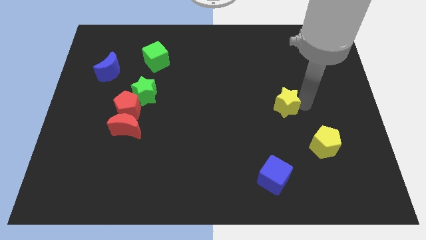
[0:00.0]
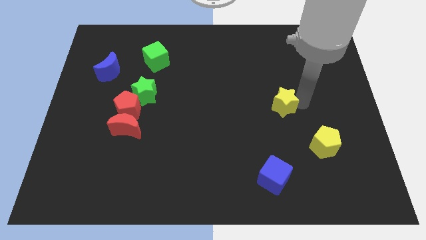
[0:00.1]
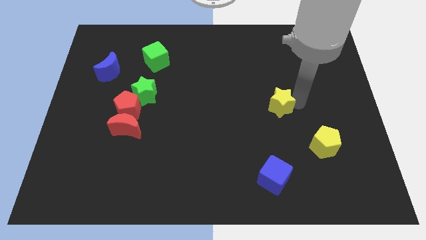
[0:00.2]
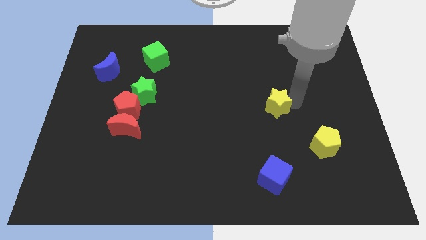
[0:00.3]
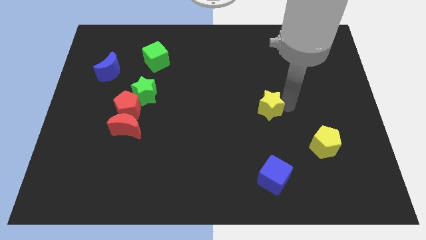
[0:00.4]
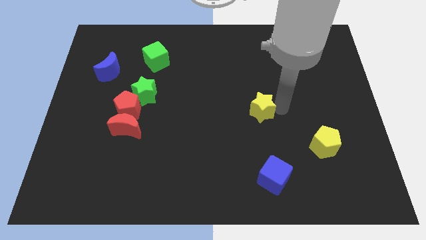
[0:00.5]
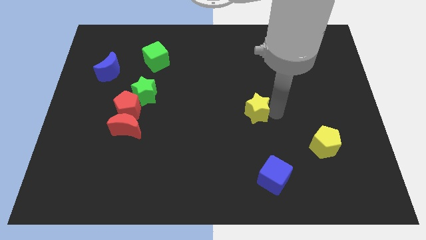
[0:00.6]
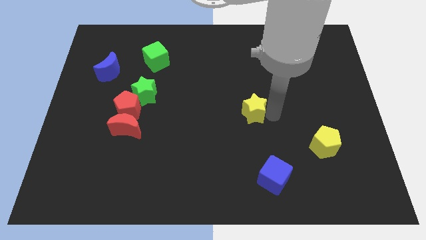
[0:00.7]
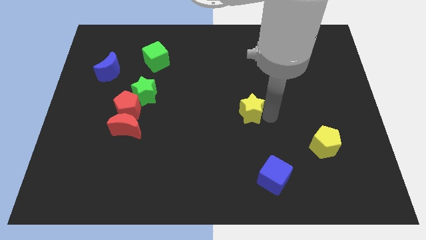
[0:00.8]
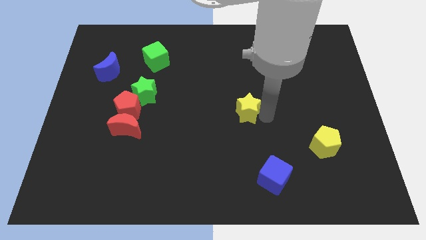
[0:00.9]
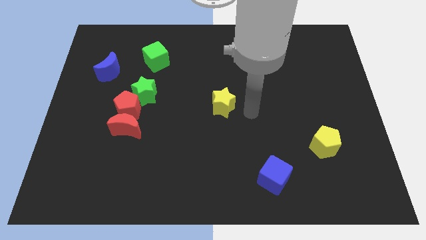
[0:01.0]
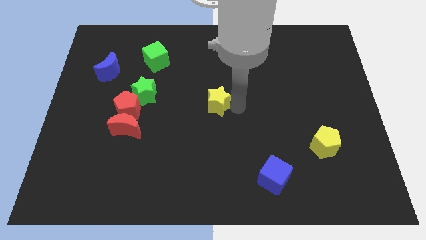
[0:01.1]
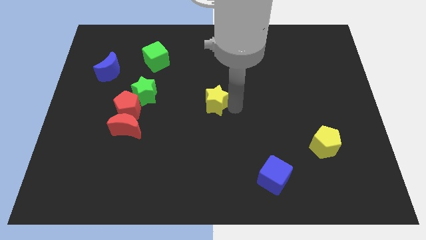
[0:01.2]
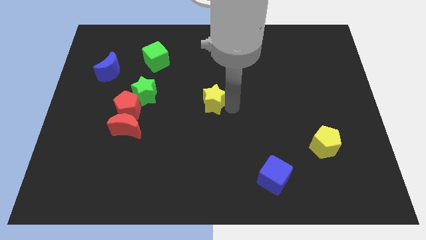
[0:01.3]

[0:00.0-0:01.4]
slide the yellow star to the center of the board

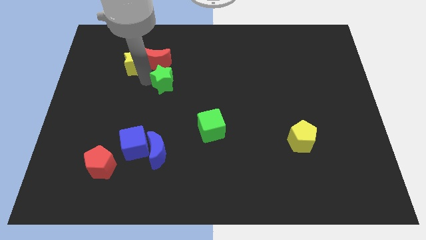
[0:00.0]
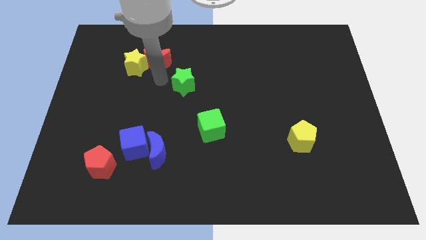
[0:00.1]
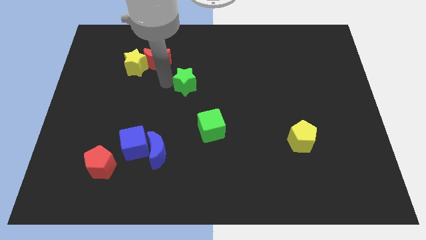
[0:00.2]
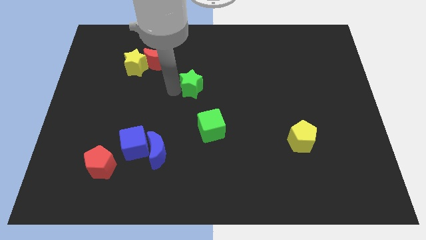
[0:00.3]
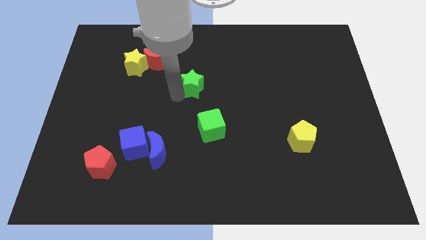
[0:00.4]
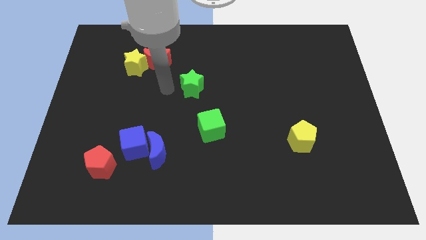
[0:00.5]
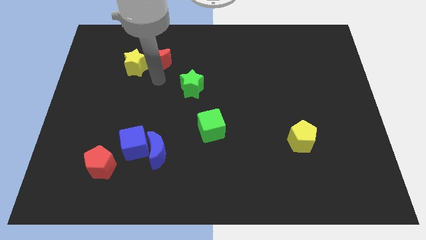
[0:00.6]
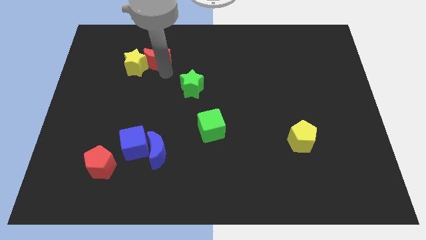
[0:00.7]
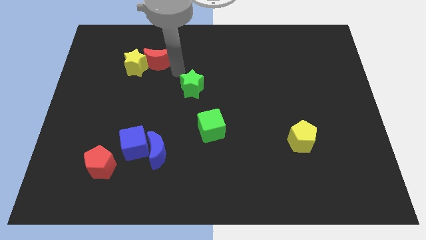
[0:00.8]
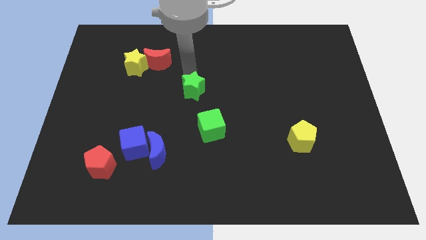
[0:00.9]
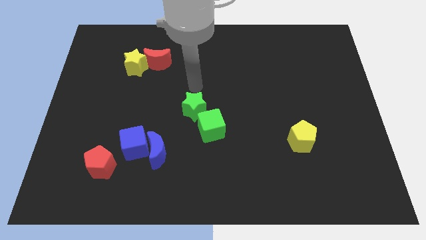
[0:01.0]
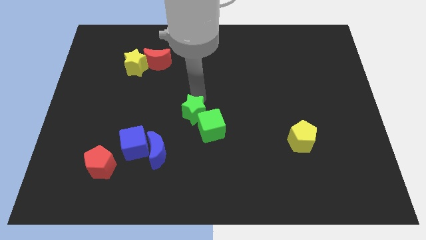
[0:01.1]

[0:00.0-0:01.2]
move the green star to the top left of the green cube

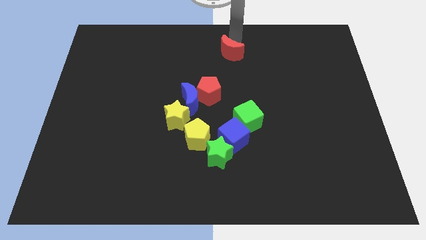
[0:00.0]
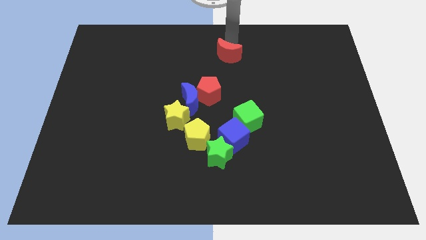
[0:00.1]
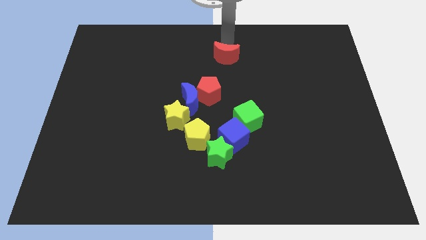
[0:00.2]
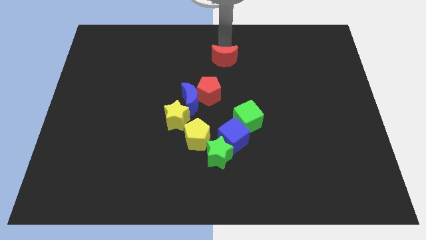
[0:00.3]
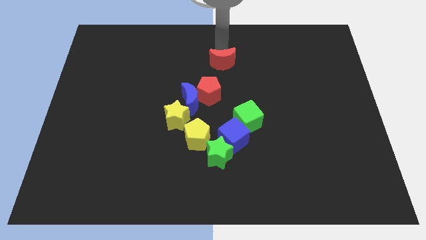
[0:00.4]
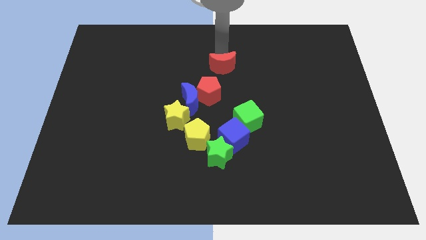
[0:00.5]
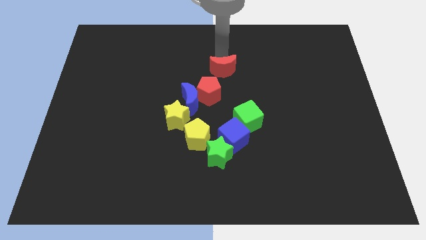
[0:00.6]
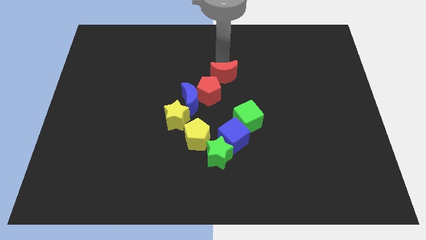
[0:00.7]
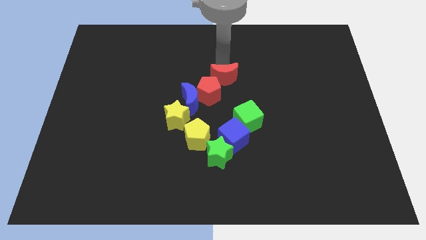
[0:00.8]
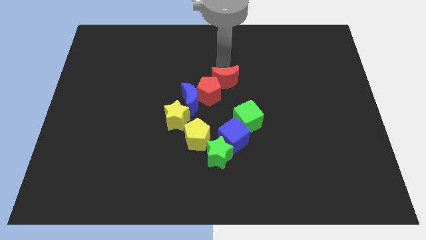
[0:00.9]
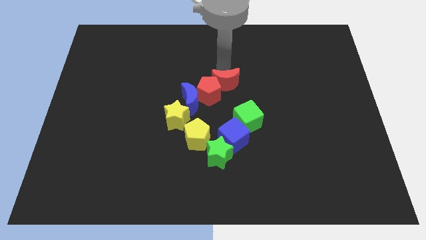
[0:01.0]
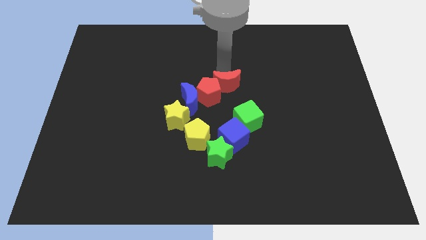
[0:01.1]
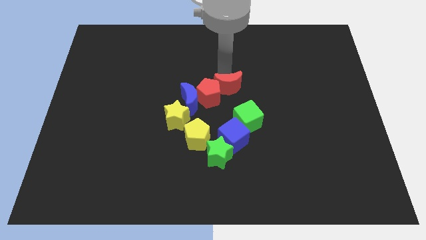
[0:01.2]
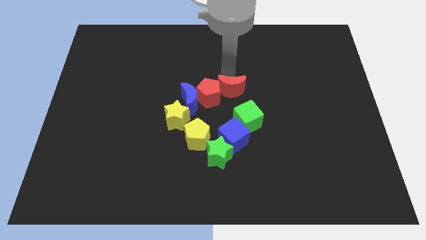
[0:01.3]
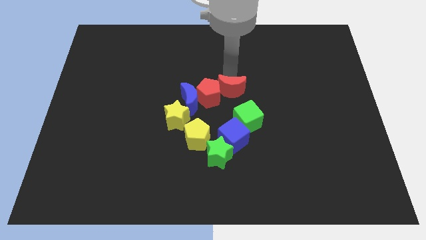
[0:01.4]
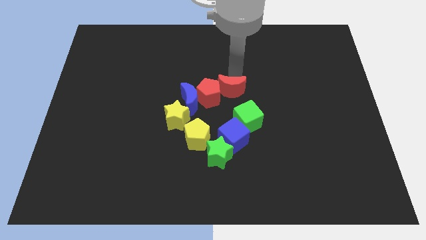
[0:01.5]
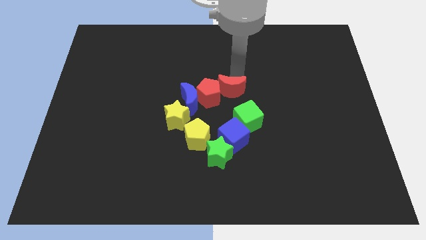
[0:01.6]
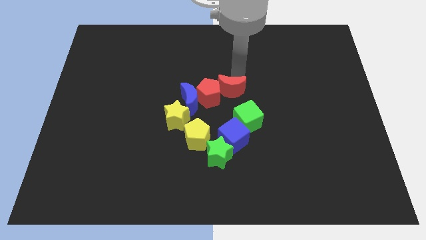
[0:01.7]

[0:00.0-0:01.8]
push the red crescent into the red pentagon

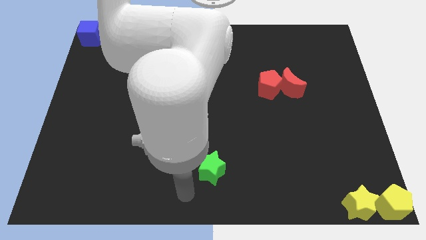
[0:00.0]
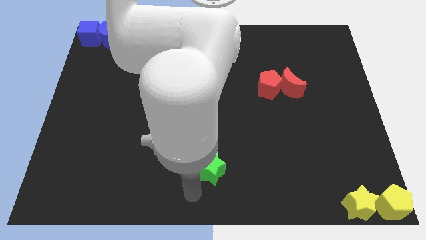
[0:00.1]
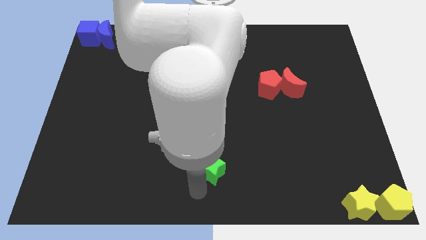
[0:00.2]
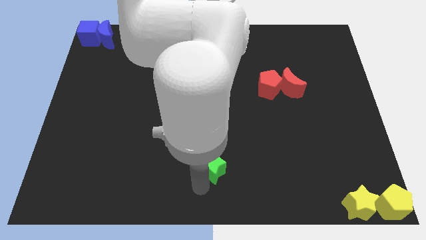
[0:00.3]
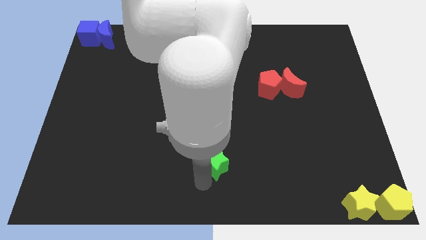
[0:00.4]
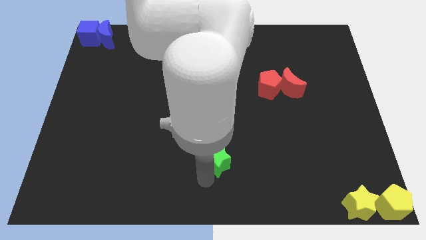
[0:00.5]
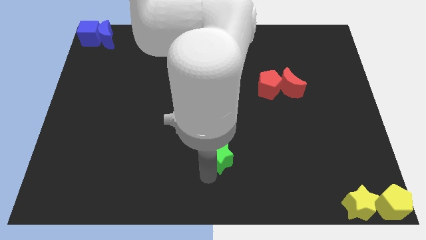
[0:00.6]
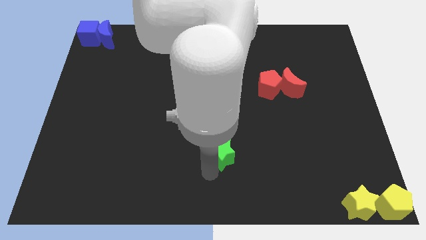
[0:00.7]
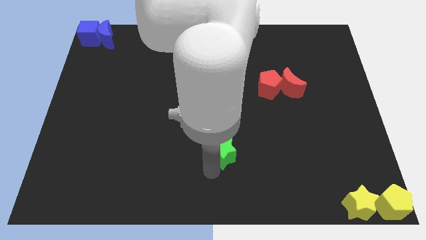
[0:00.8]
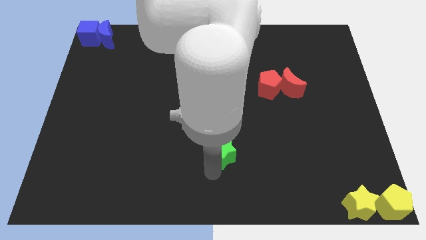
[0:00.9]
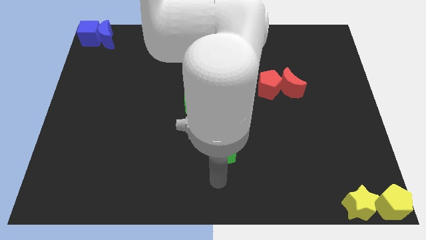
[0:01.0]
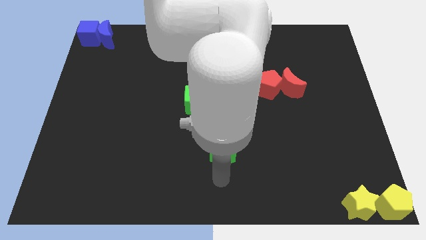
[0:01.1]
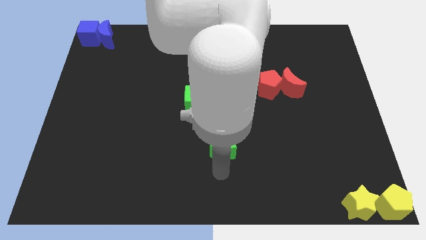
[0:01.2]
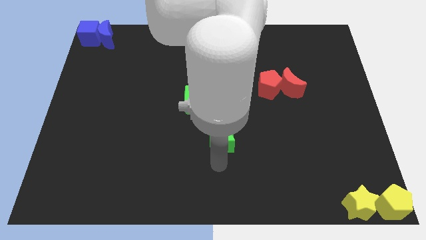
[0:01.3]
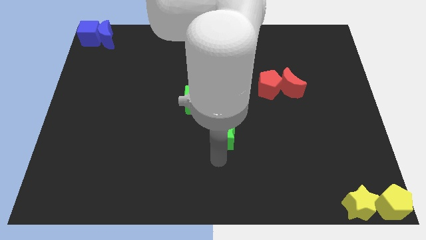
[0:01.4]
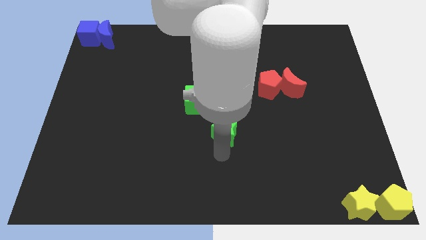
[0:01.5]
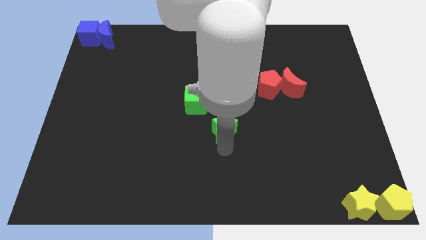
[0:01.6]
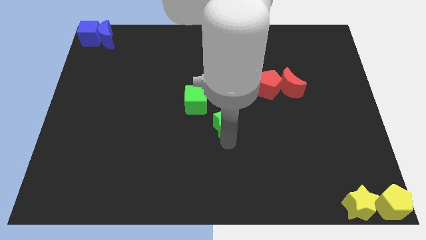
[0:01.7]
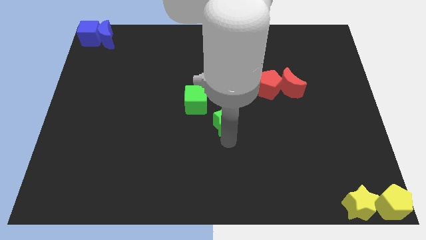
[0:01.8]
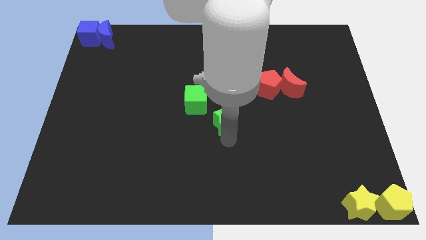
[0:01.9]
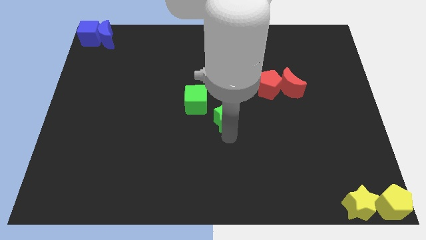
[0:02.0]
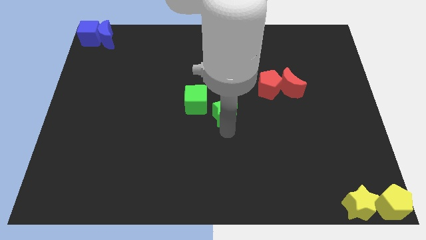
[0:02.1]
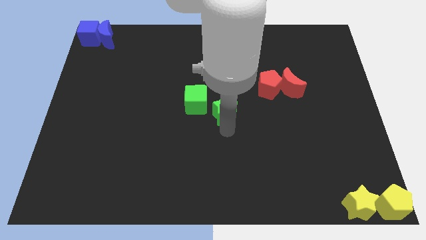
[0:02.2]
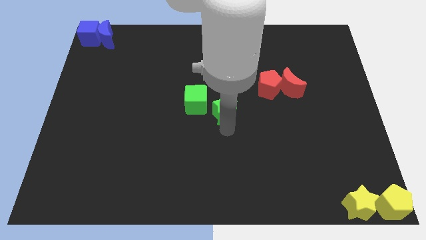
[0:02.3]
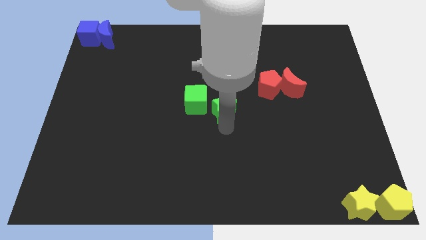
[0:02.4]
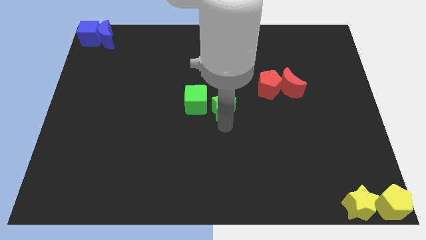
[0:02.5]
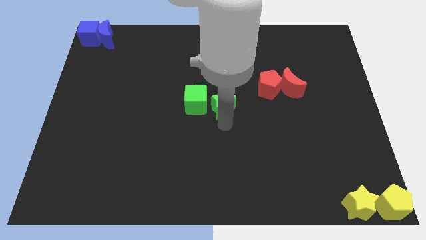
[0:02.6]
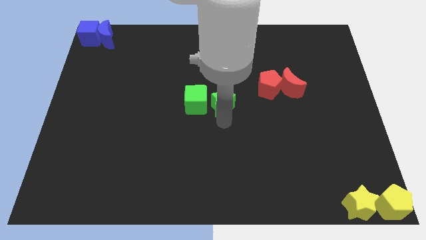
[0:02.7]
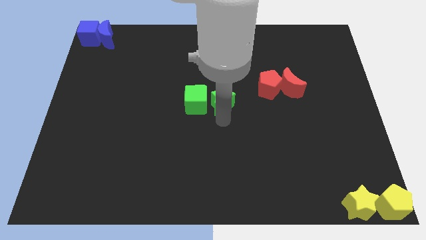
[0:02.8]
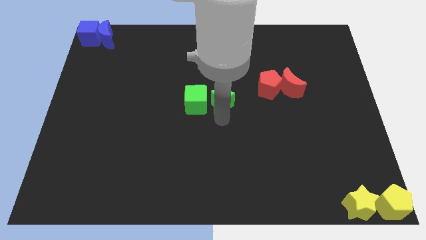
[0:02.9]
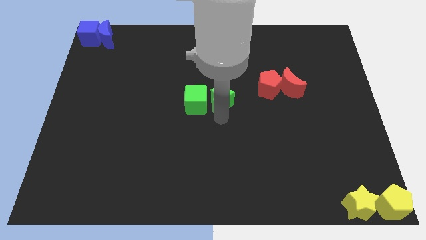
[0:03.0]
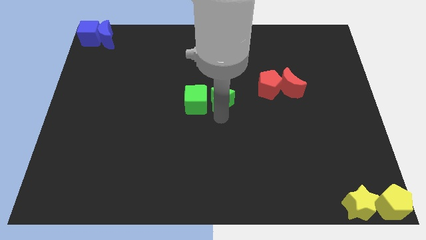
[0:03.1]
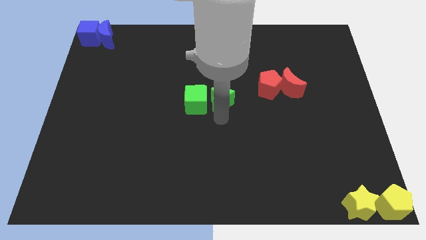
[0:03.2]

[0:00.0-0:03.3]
drag the green star to the right side of the green cube

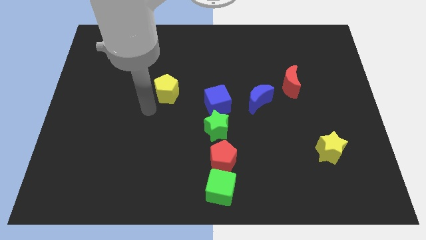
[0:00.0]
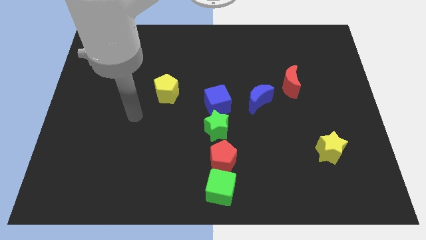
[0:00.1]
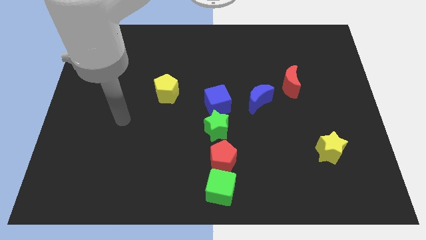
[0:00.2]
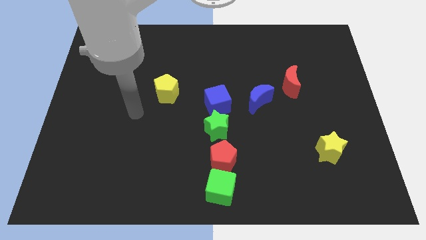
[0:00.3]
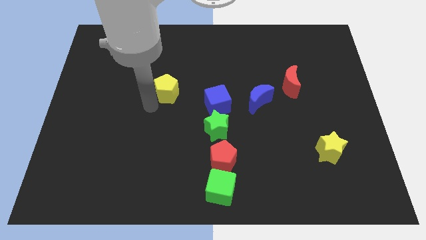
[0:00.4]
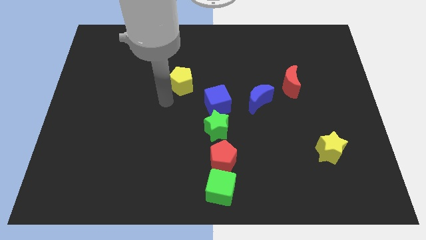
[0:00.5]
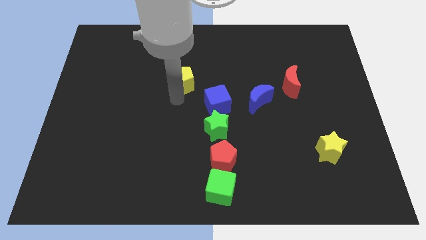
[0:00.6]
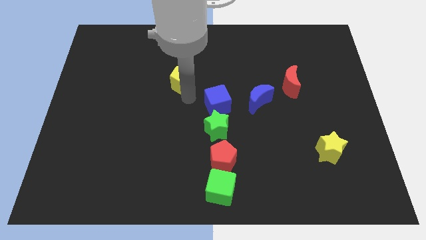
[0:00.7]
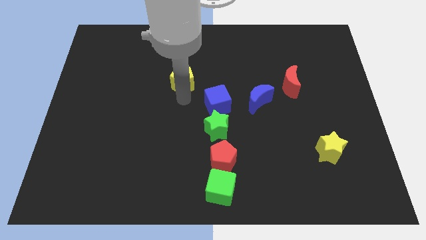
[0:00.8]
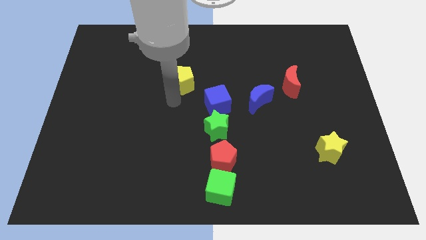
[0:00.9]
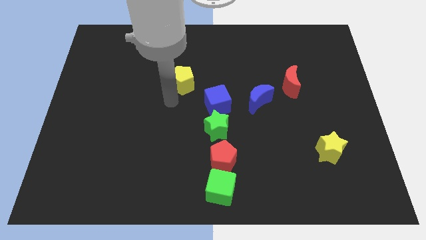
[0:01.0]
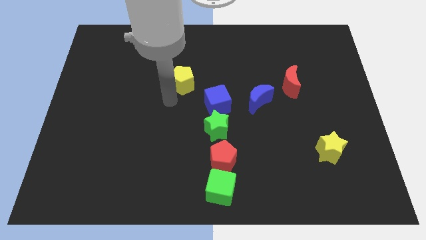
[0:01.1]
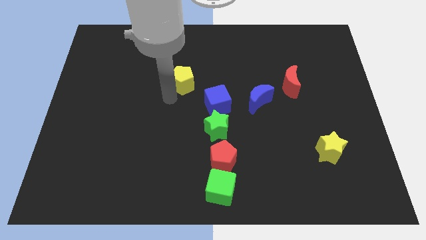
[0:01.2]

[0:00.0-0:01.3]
place yellow pentagon to the top left of blue cube
